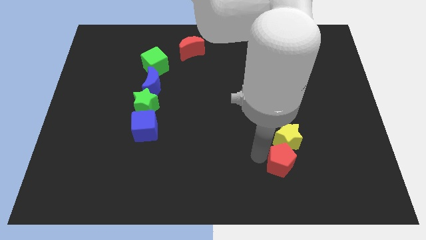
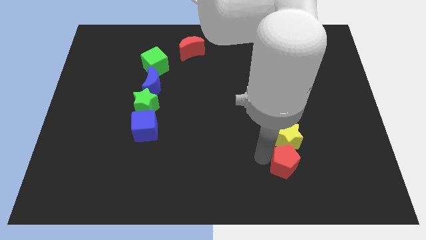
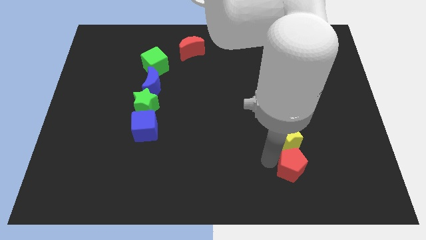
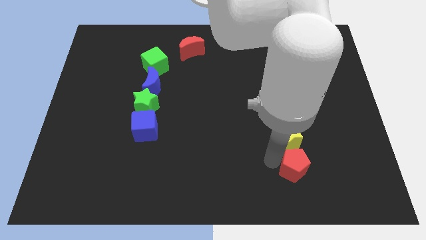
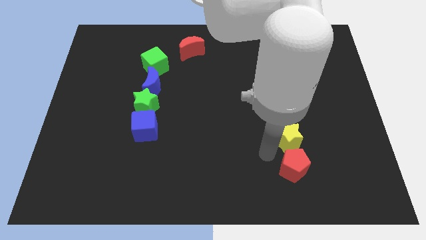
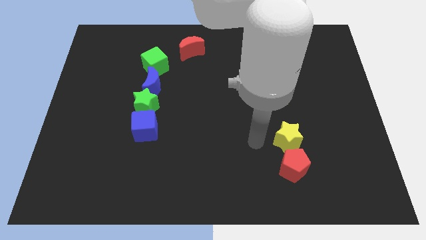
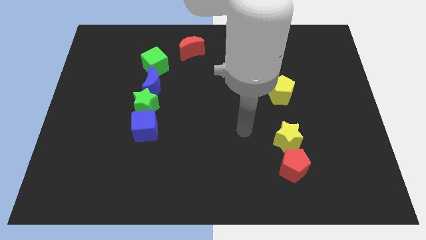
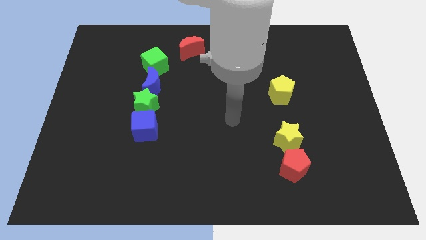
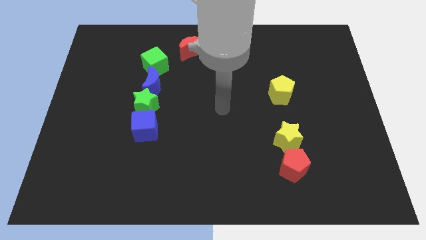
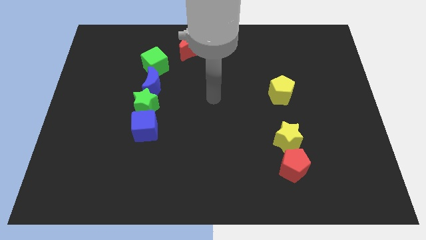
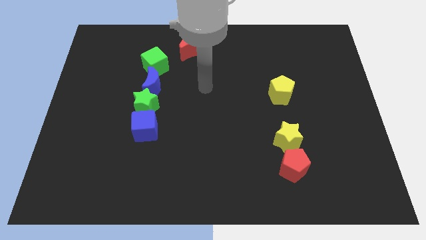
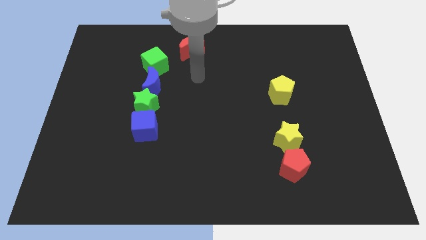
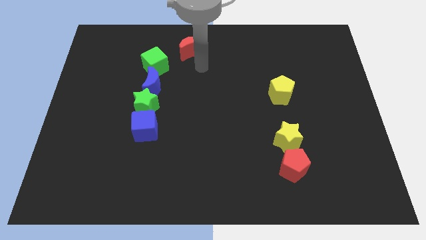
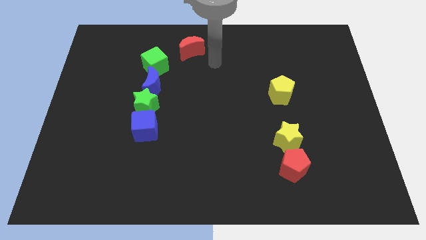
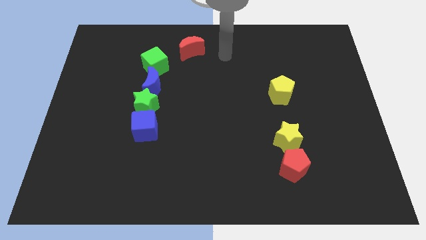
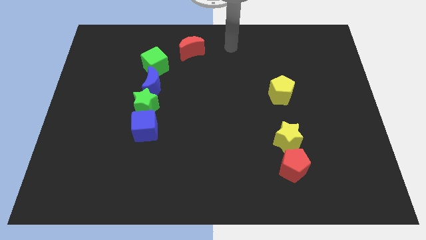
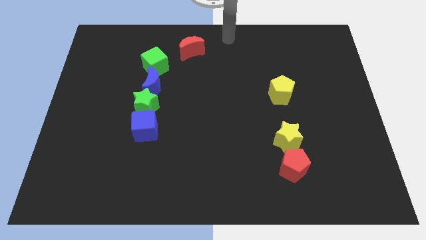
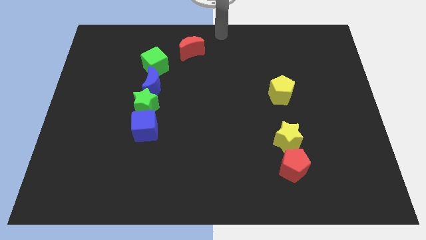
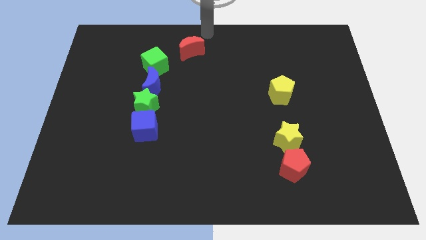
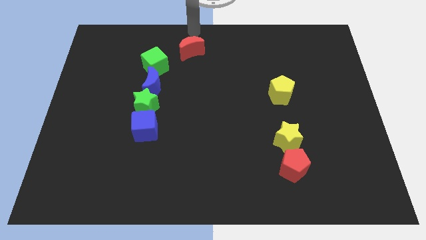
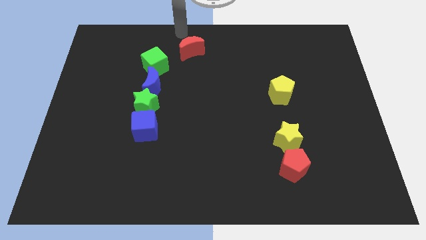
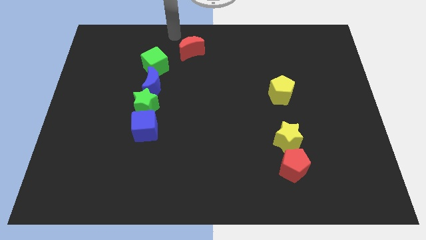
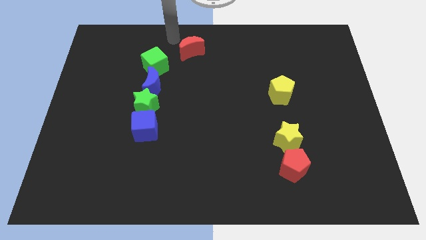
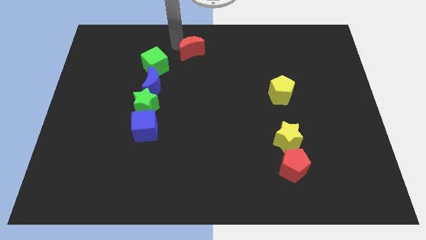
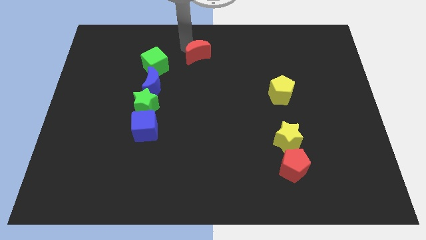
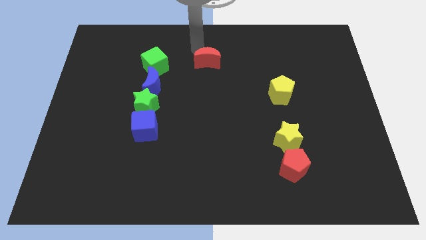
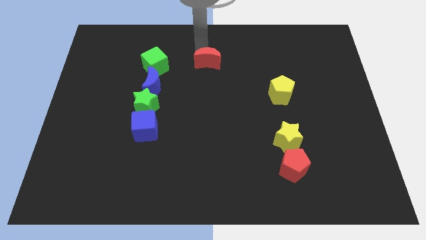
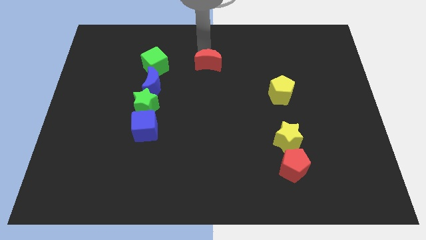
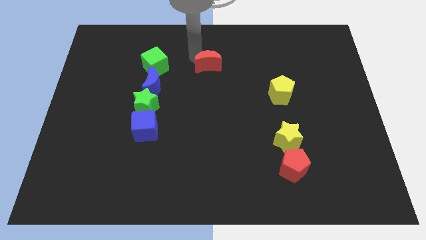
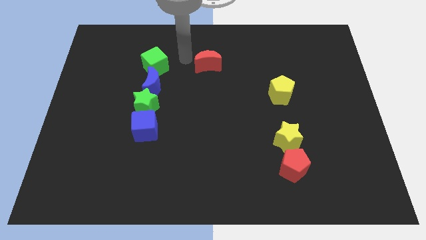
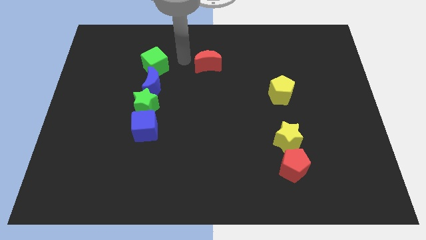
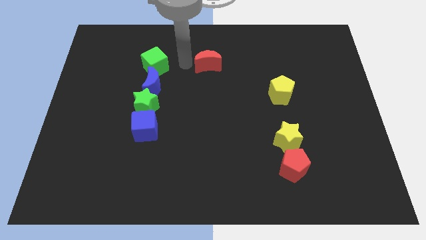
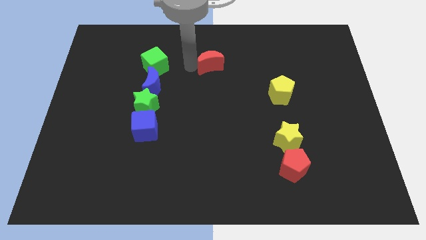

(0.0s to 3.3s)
move red moon parallel to green cube

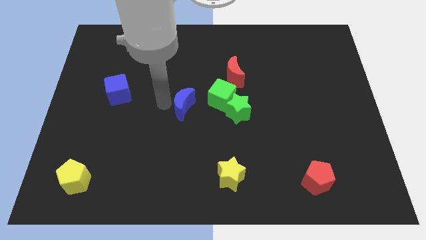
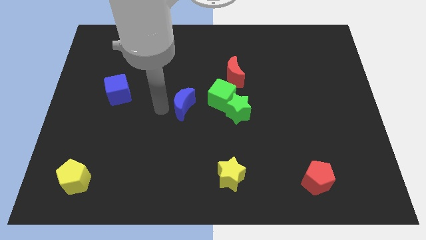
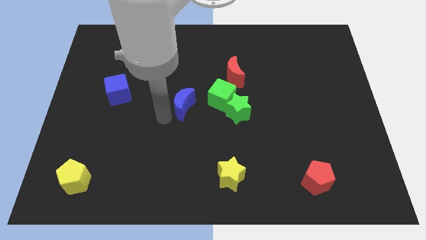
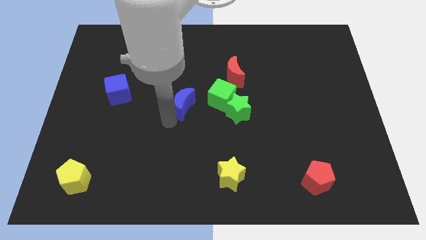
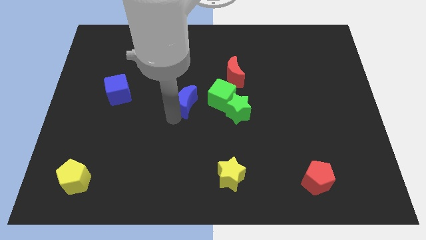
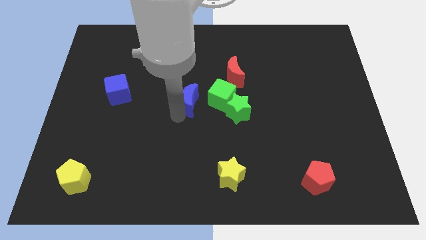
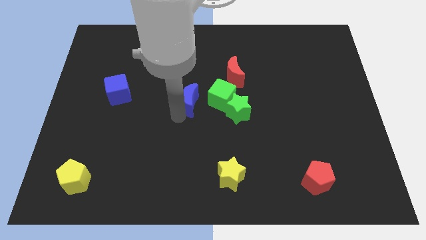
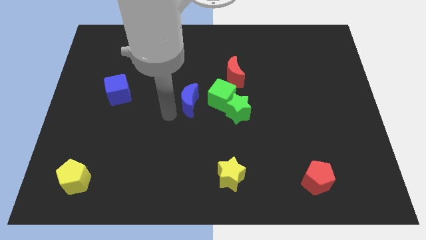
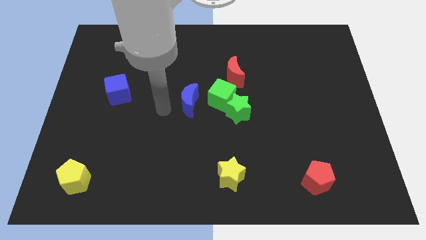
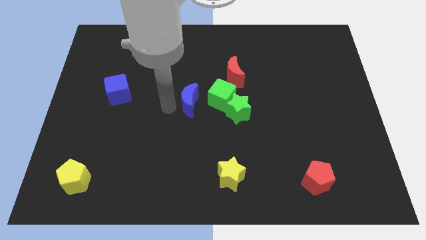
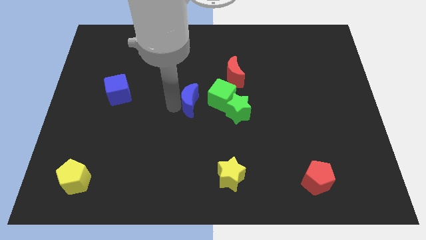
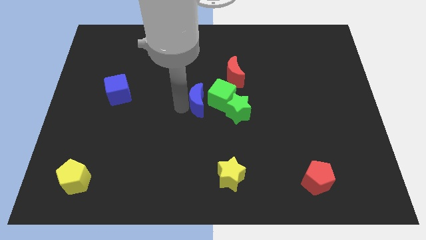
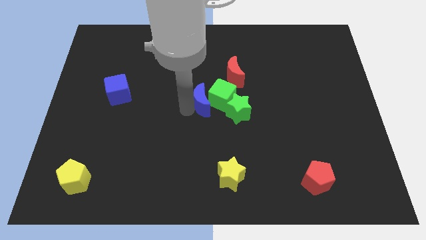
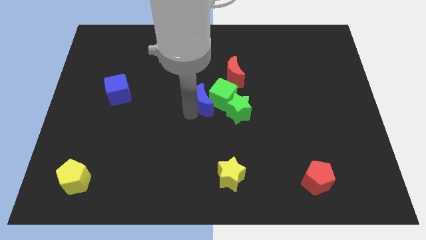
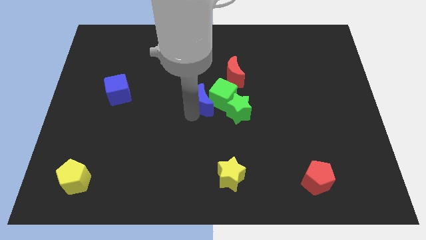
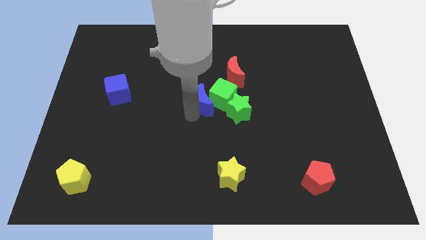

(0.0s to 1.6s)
move blue moon into green cube

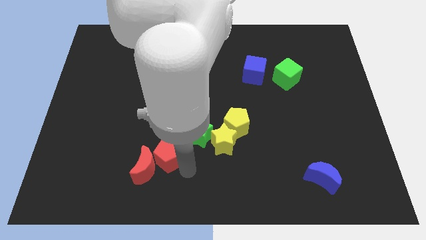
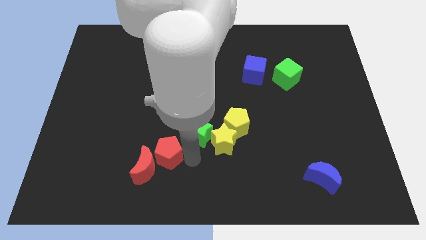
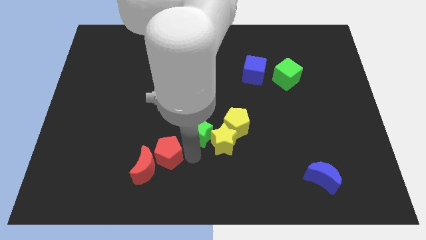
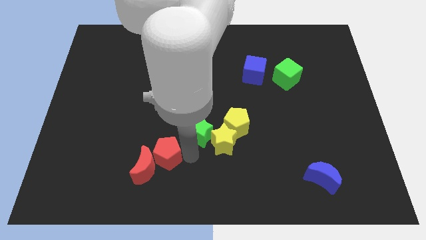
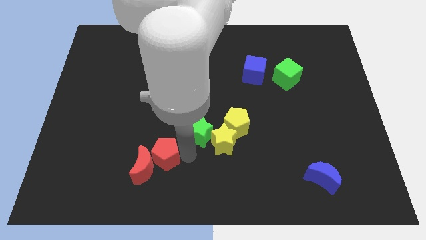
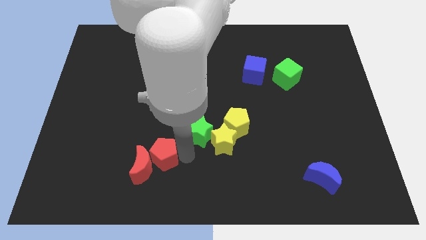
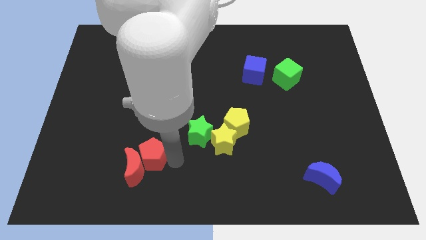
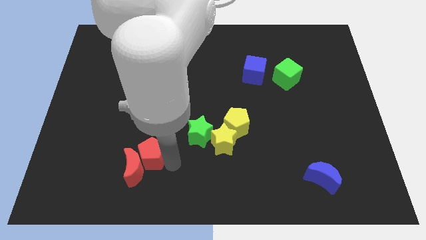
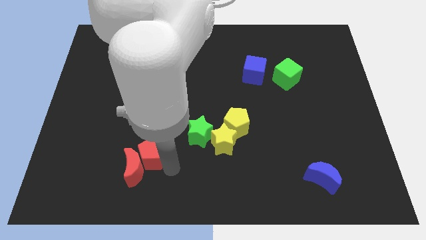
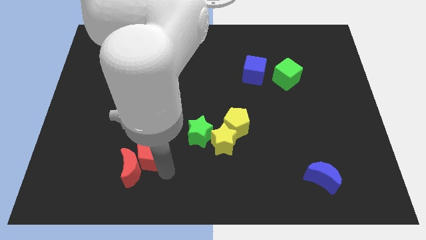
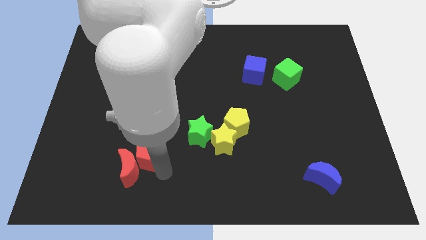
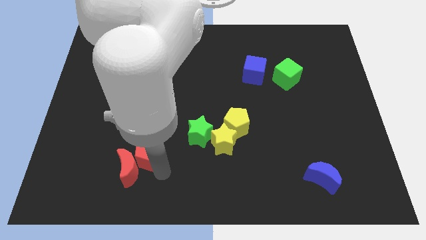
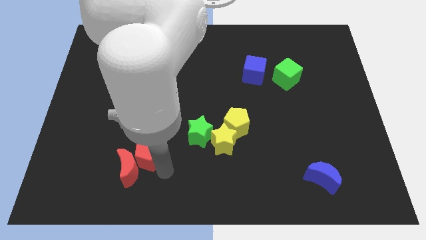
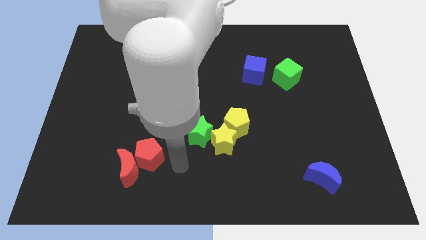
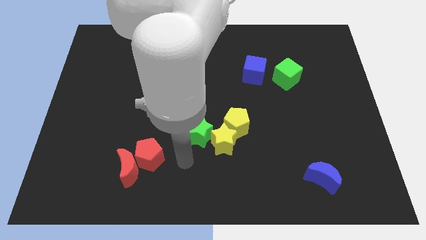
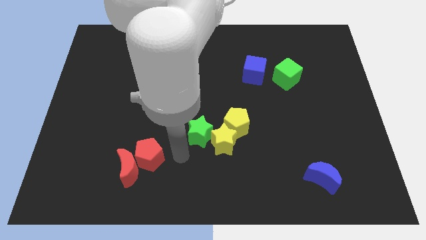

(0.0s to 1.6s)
slightly push the red pentagon with red crescent towards left of the board

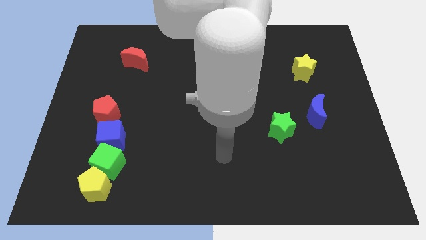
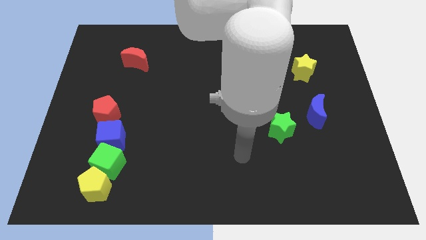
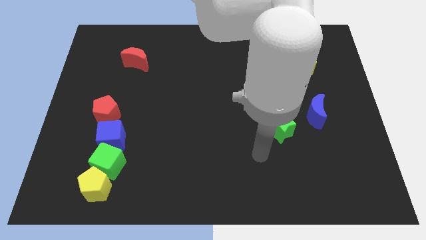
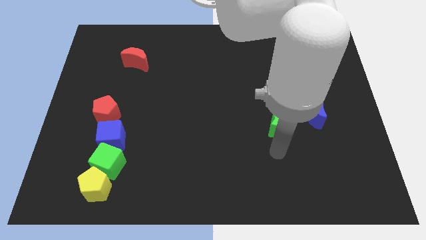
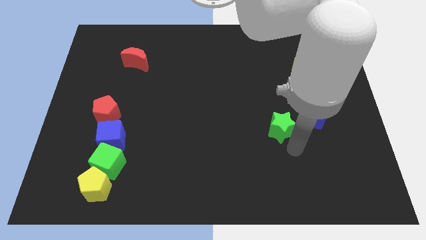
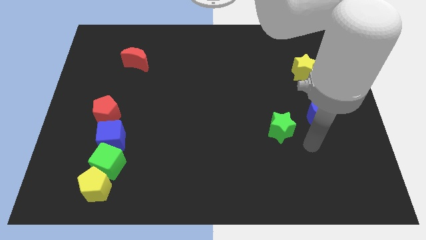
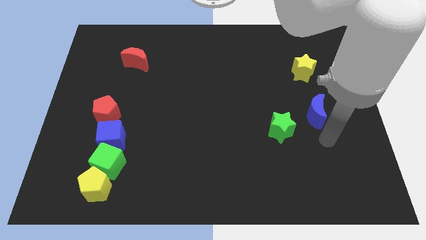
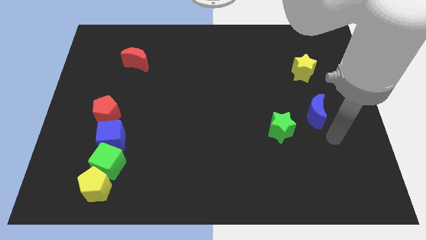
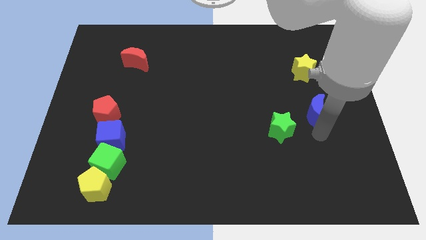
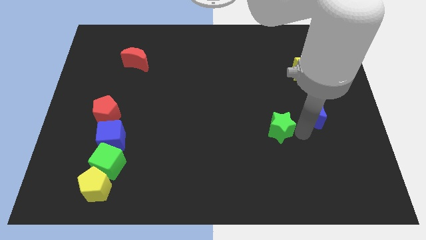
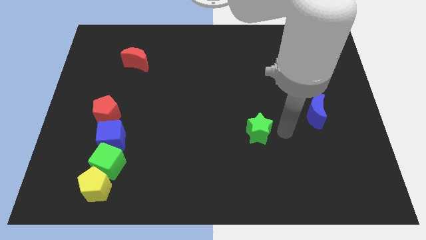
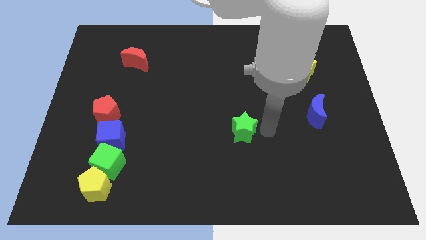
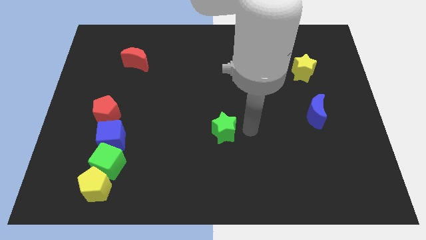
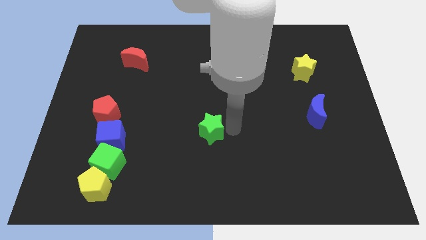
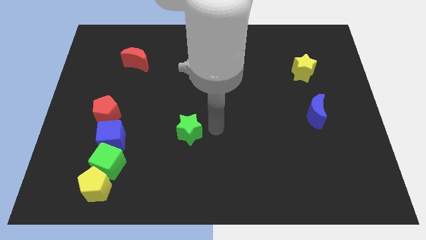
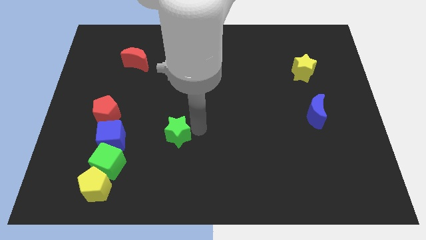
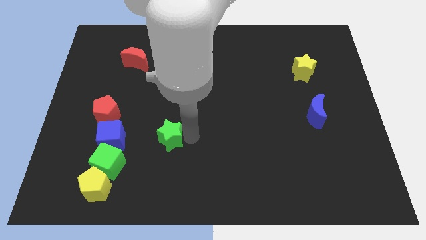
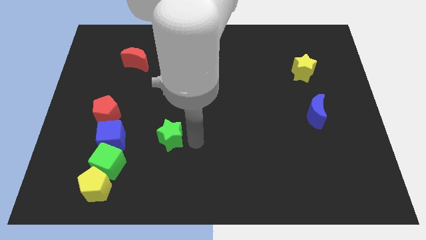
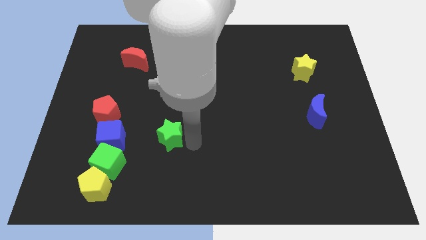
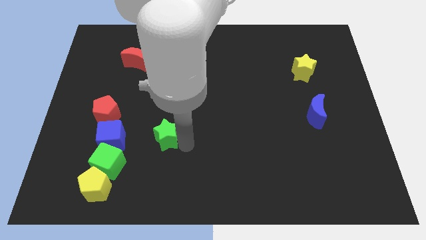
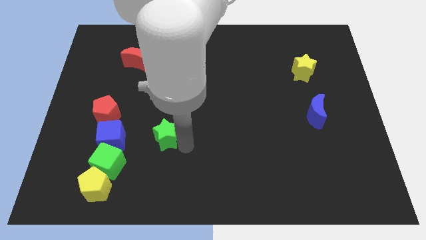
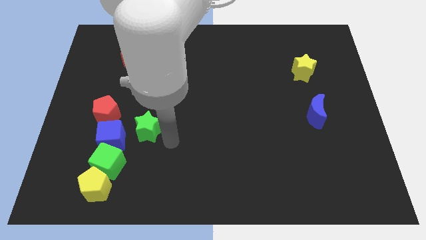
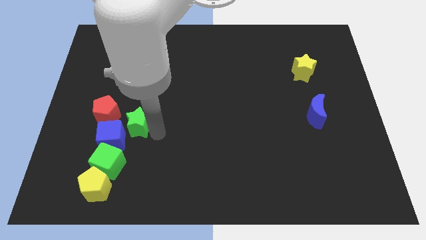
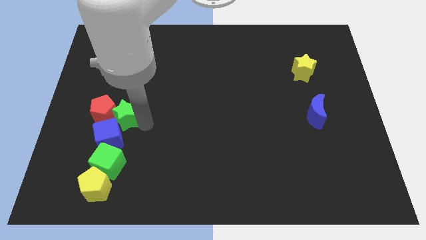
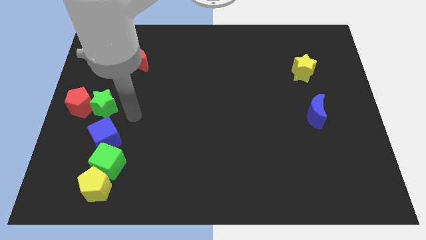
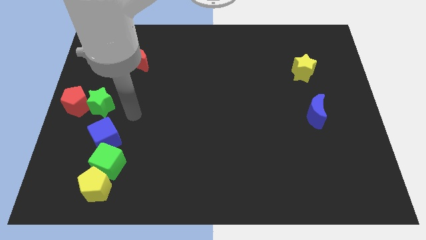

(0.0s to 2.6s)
separate green star from blue moon
